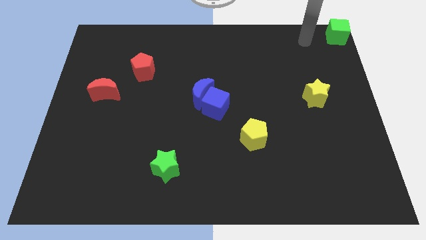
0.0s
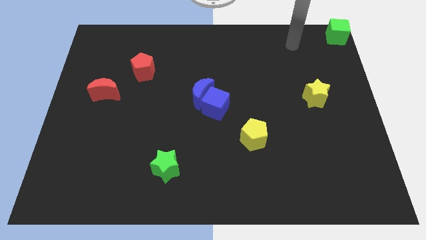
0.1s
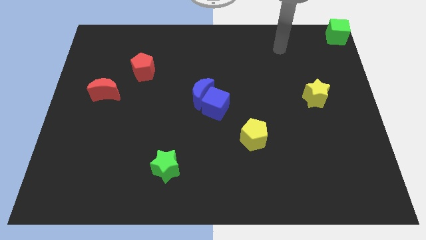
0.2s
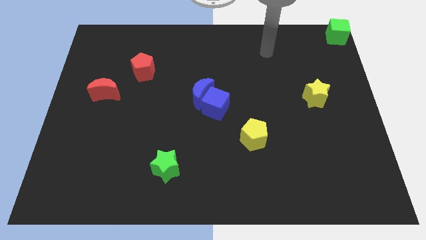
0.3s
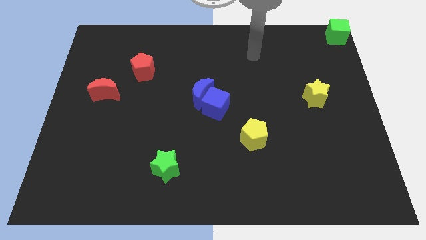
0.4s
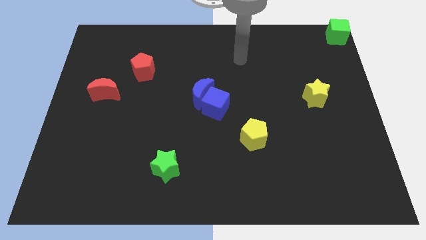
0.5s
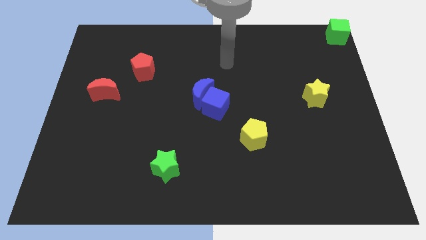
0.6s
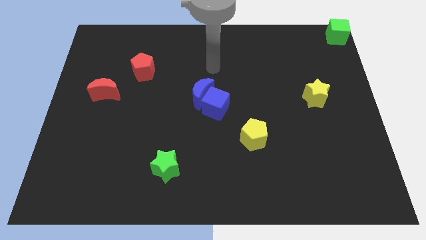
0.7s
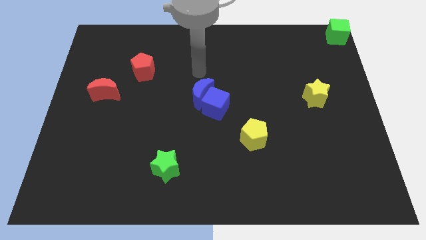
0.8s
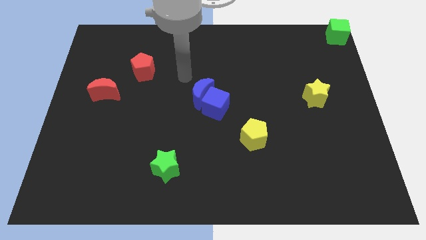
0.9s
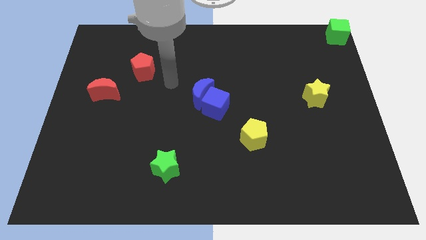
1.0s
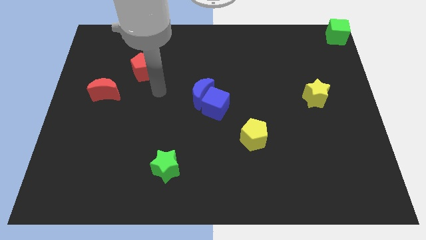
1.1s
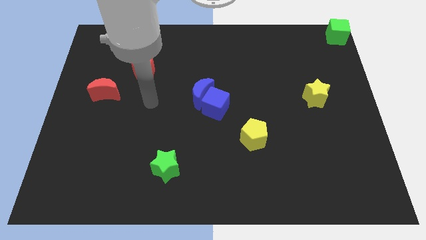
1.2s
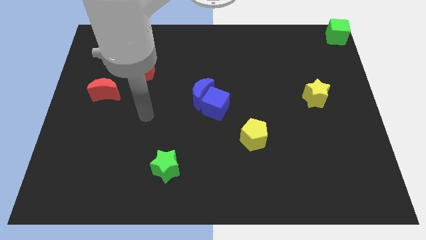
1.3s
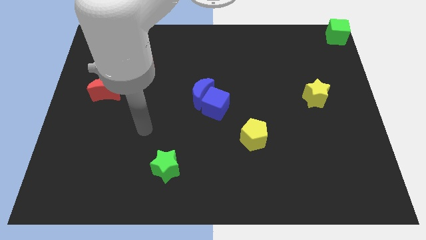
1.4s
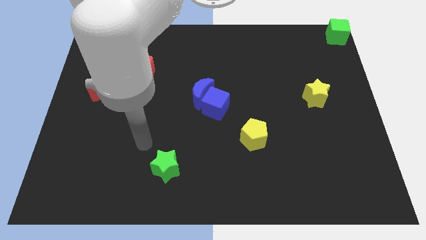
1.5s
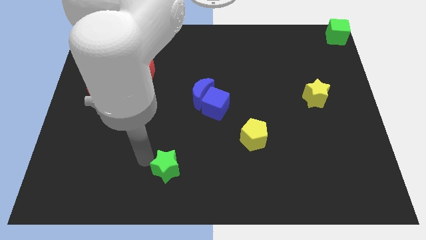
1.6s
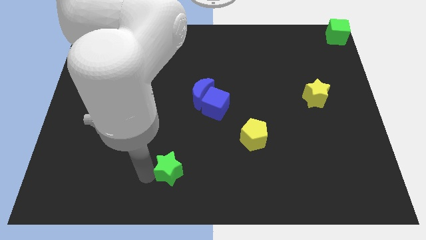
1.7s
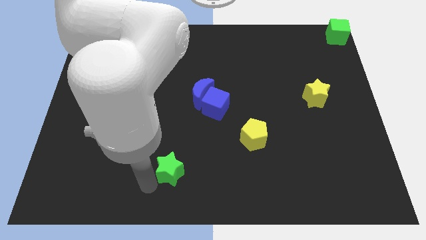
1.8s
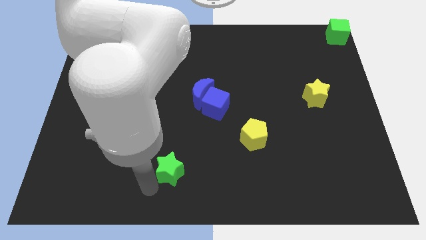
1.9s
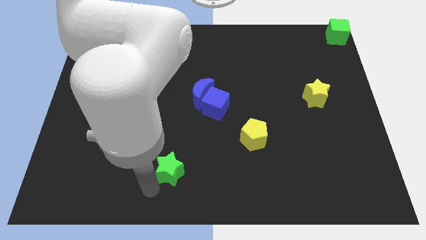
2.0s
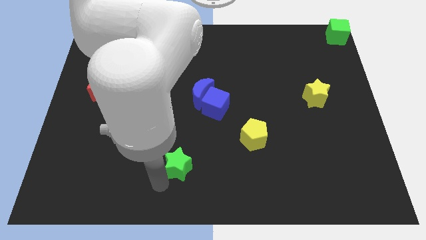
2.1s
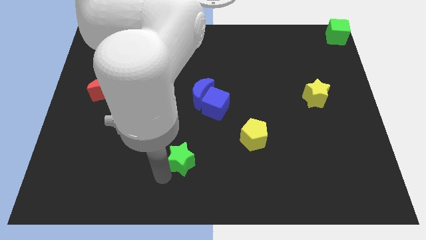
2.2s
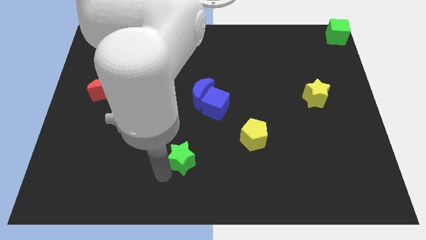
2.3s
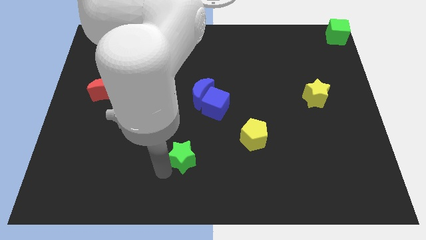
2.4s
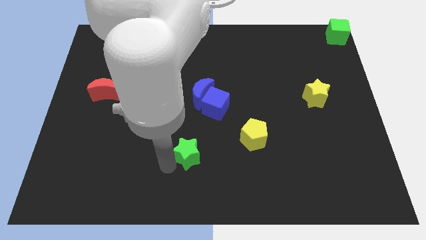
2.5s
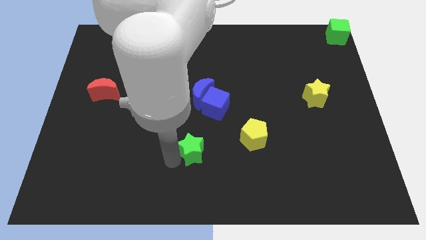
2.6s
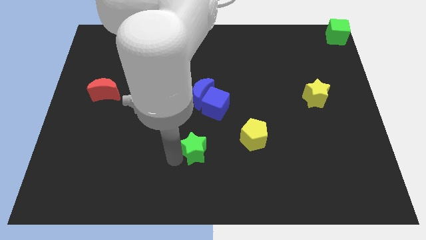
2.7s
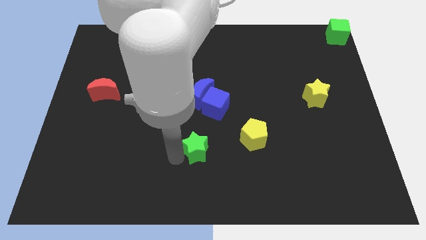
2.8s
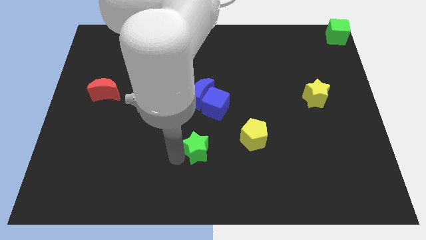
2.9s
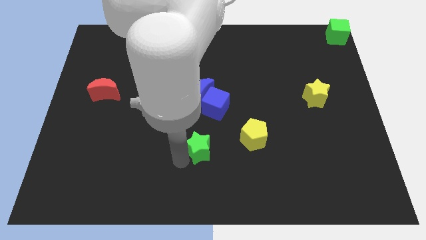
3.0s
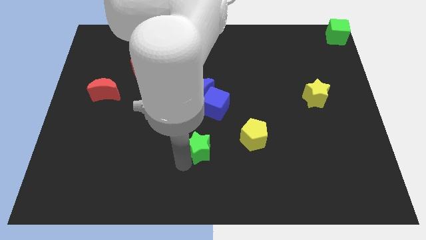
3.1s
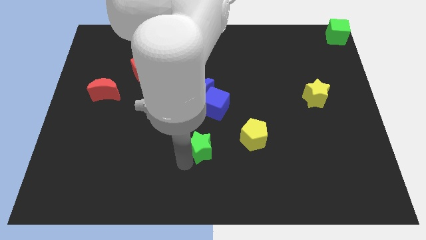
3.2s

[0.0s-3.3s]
drag the green star upwards

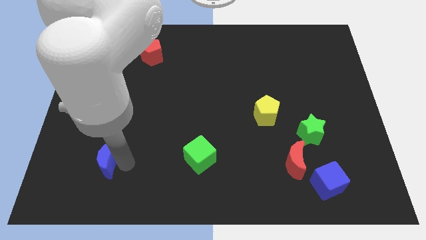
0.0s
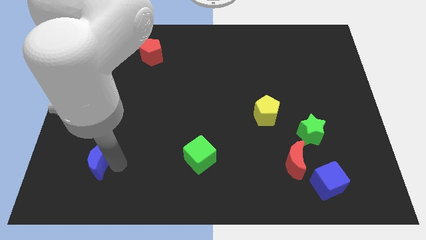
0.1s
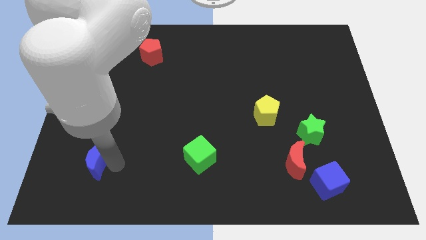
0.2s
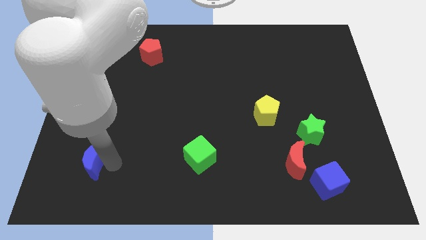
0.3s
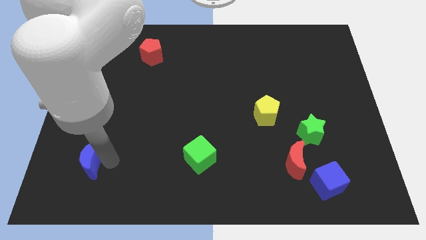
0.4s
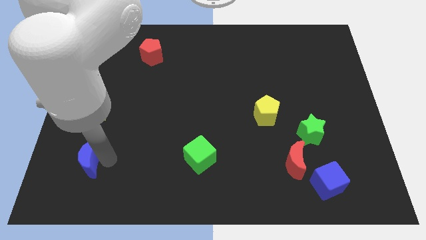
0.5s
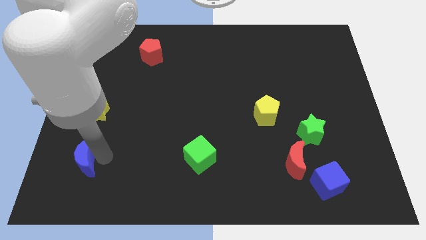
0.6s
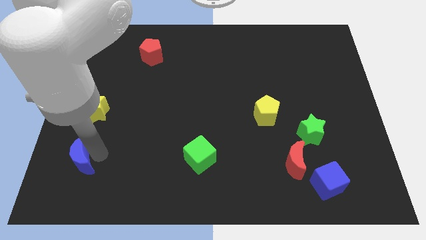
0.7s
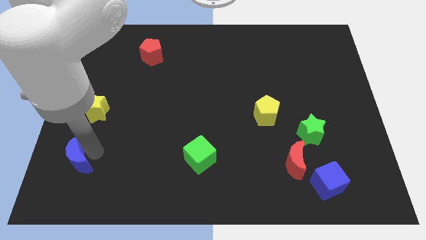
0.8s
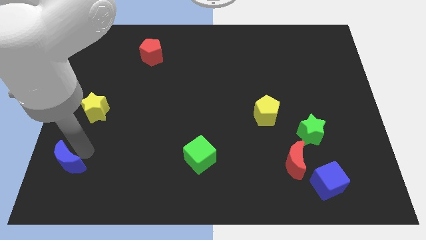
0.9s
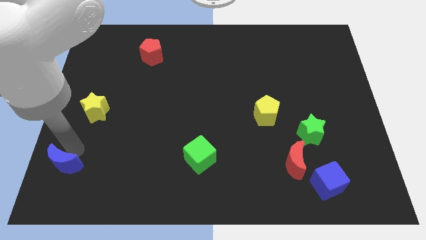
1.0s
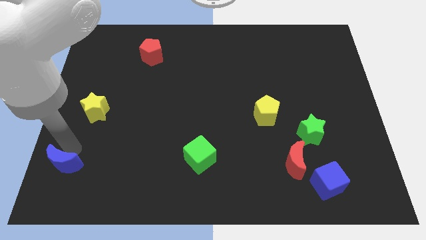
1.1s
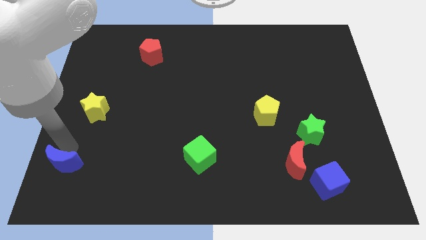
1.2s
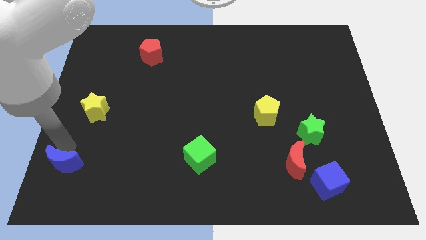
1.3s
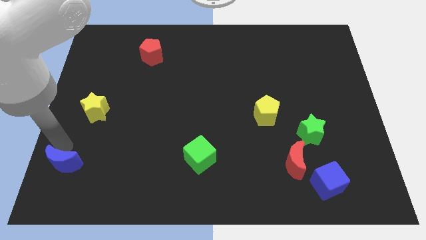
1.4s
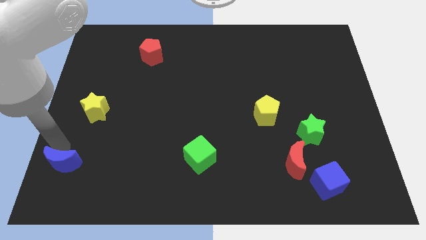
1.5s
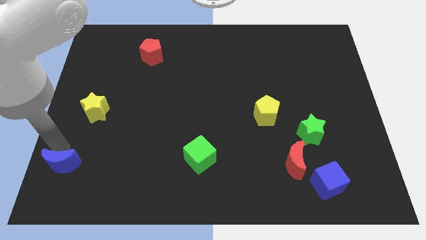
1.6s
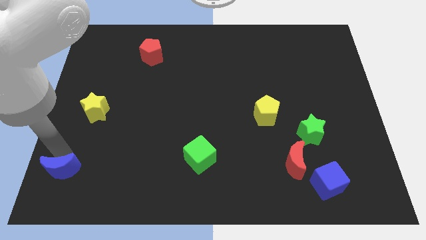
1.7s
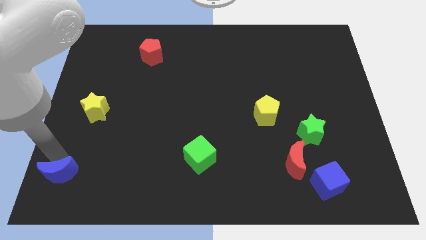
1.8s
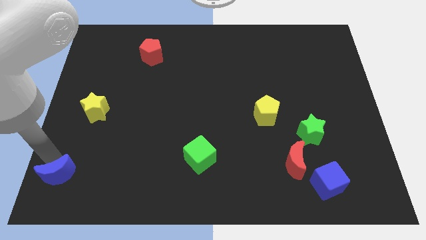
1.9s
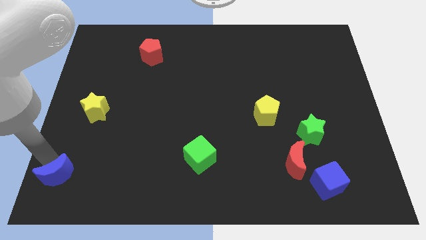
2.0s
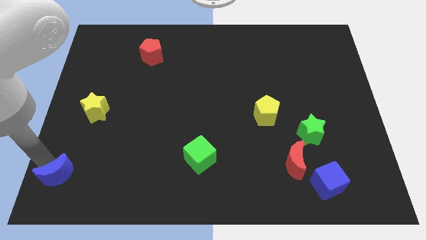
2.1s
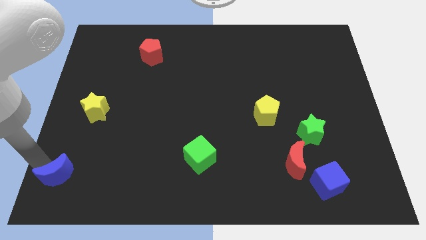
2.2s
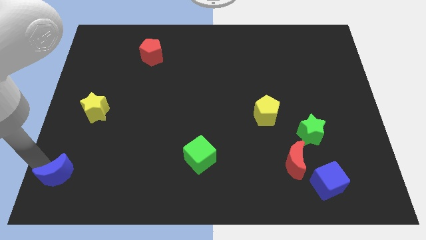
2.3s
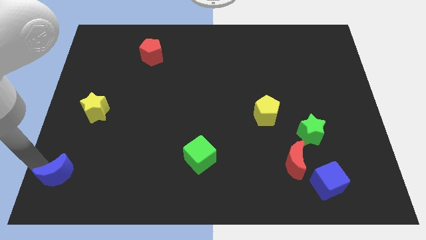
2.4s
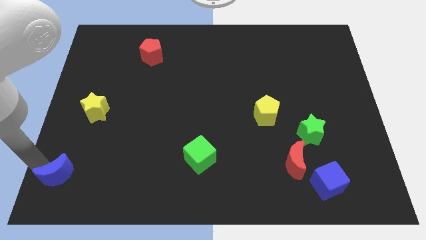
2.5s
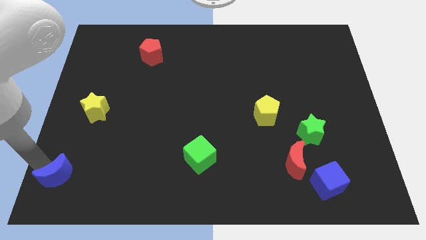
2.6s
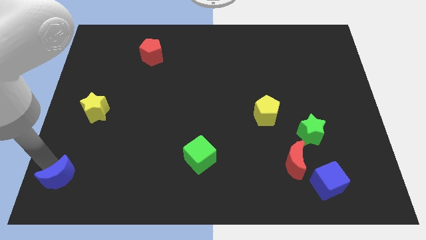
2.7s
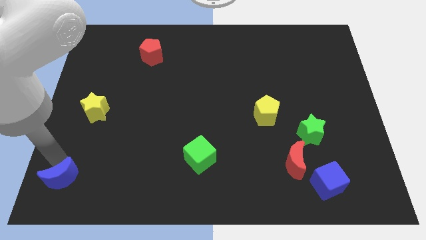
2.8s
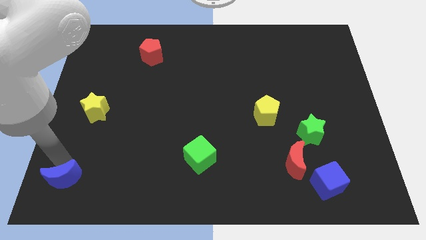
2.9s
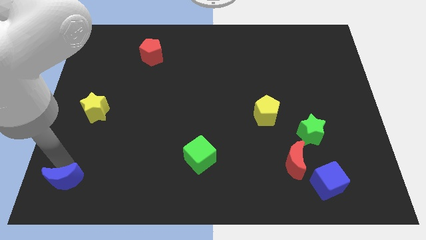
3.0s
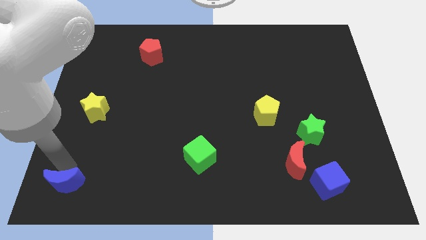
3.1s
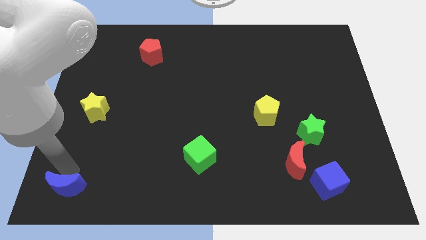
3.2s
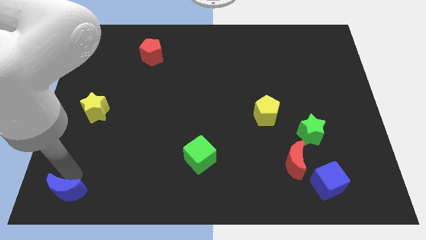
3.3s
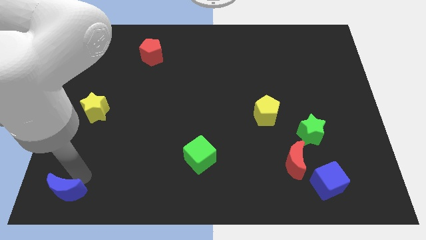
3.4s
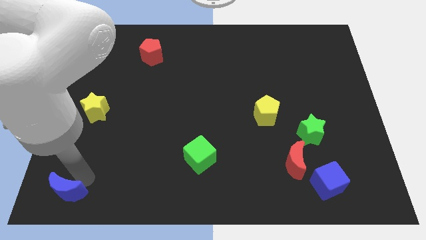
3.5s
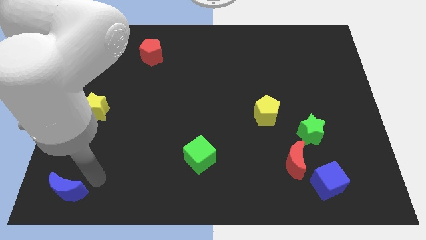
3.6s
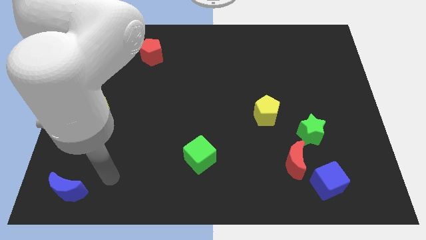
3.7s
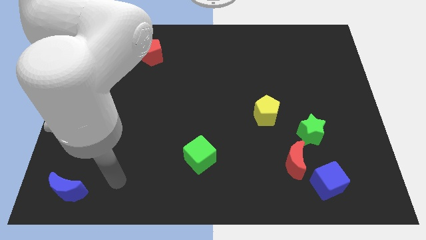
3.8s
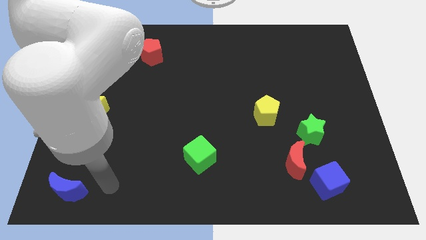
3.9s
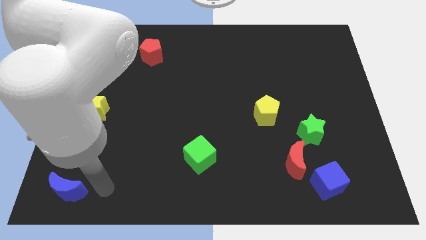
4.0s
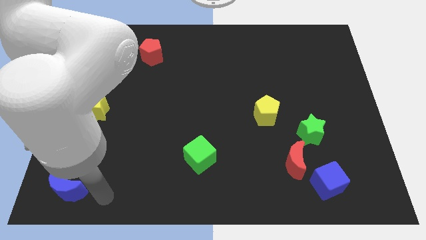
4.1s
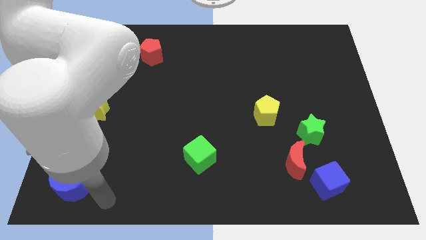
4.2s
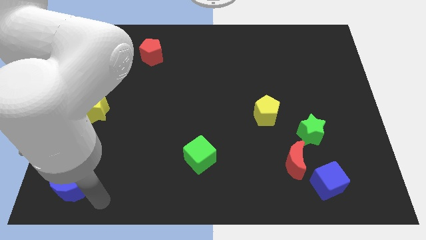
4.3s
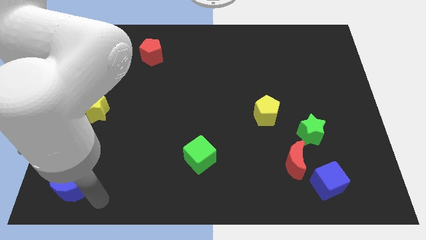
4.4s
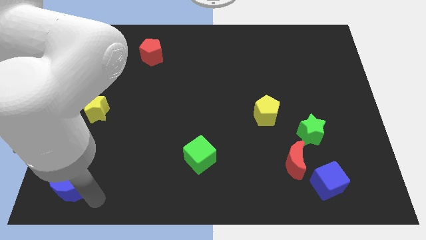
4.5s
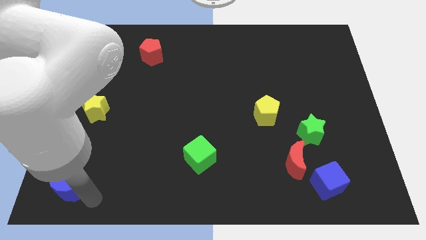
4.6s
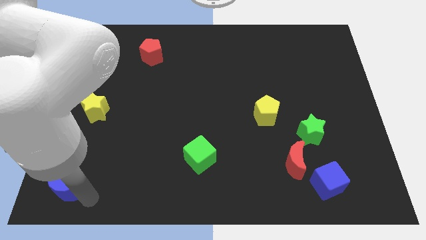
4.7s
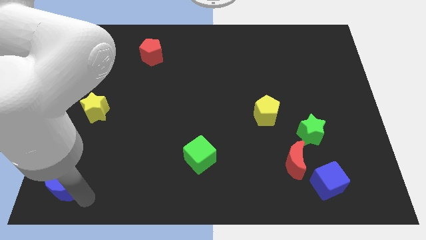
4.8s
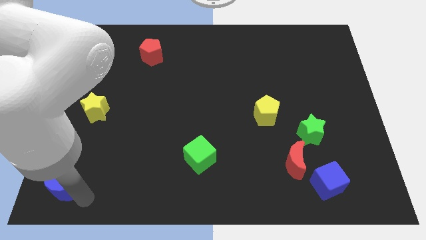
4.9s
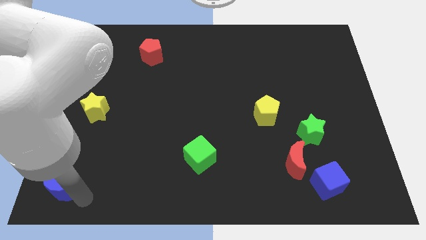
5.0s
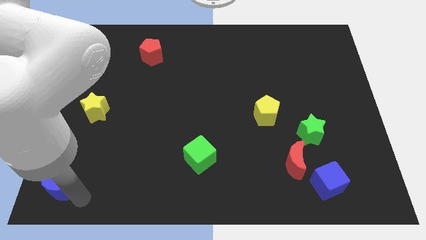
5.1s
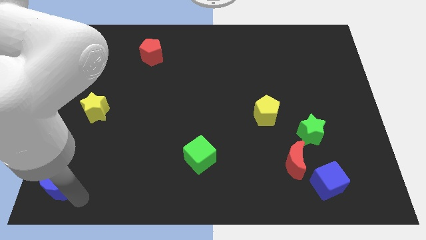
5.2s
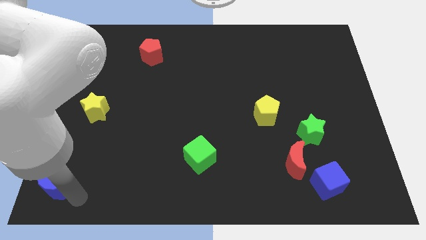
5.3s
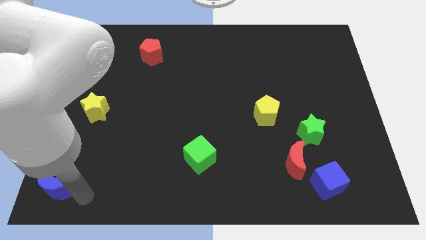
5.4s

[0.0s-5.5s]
move the blue moon towards the bottom left
